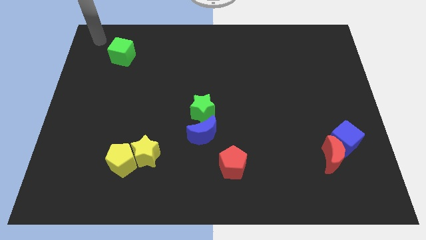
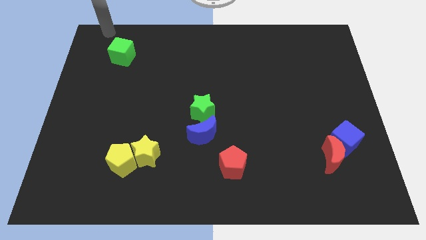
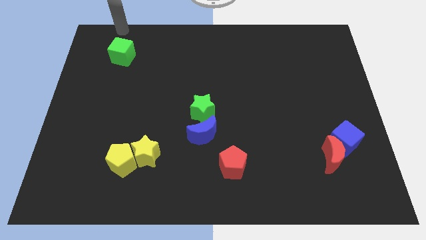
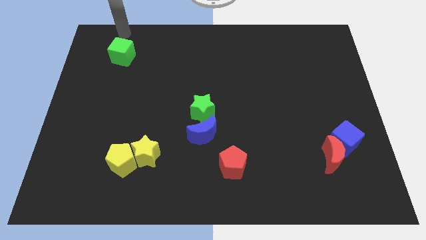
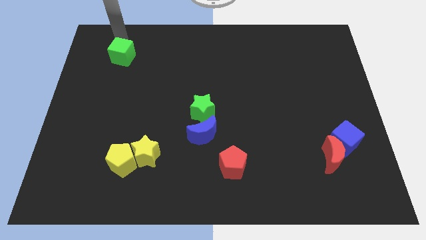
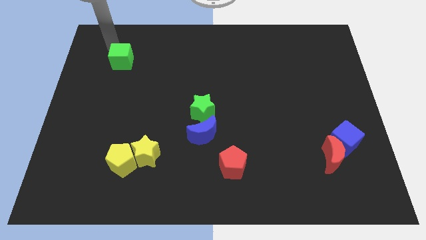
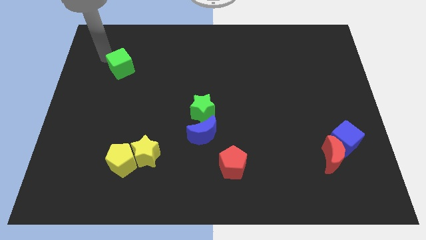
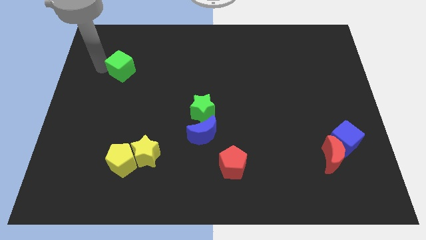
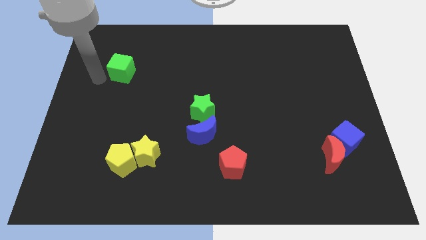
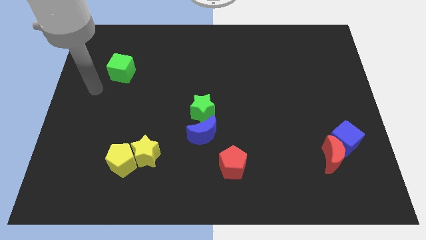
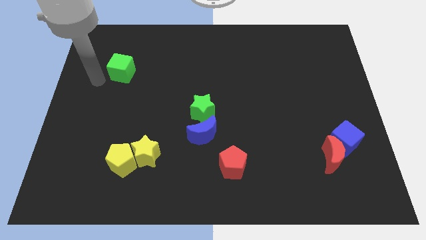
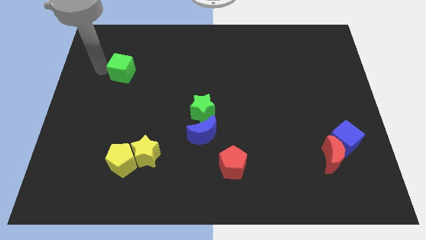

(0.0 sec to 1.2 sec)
move green cube slightly down

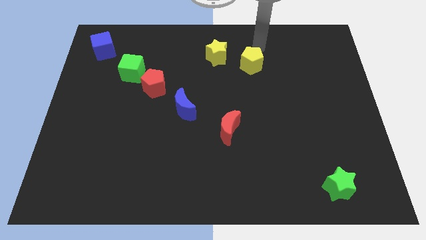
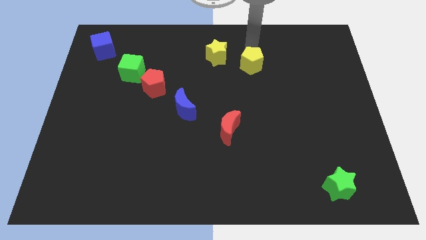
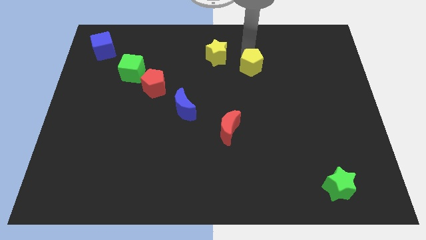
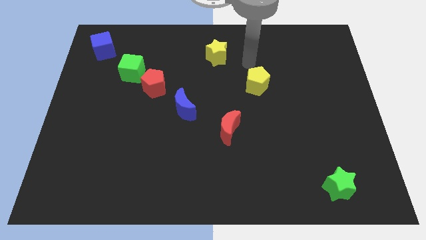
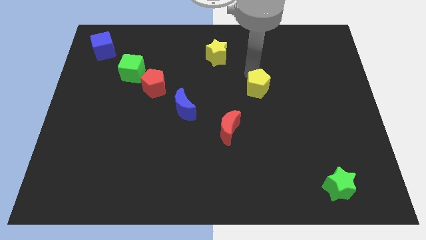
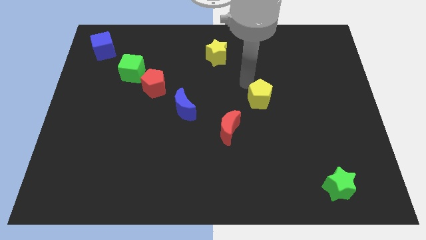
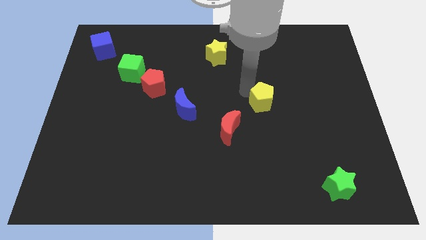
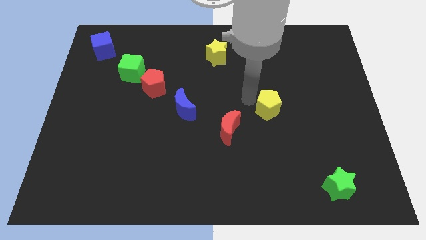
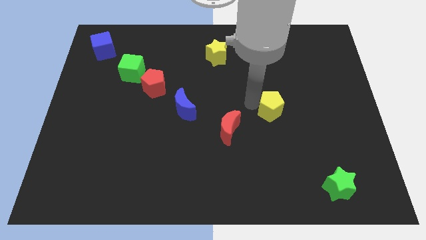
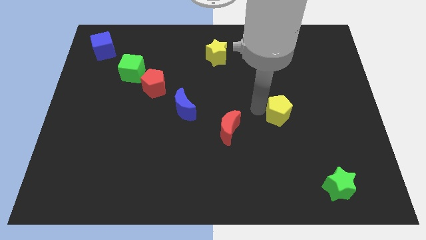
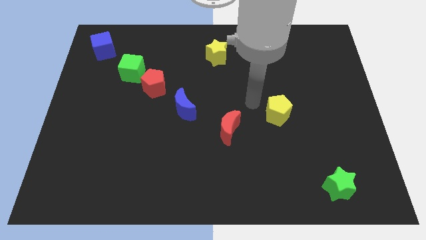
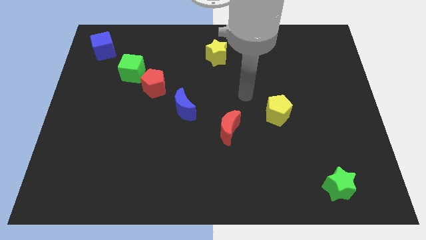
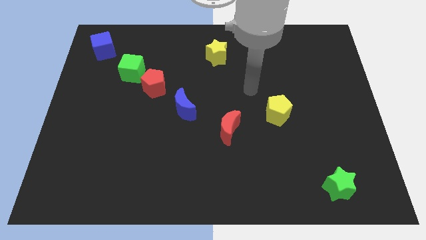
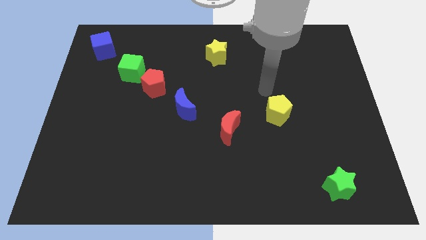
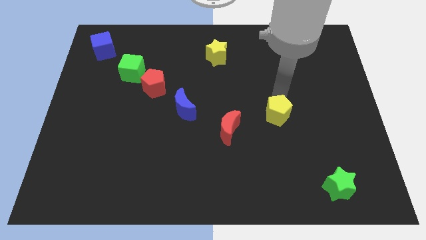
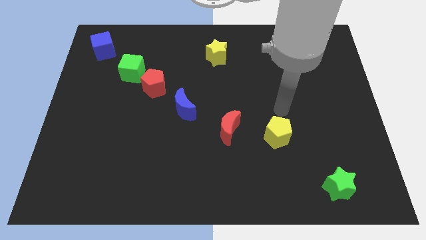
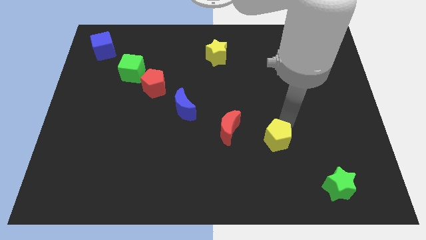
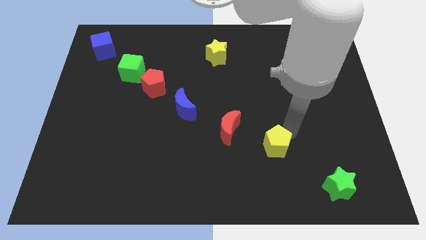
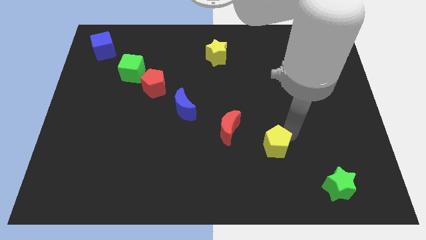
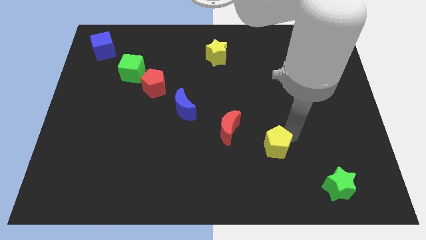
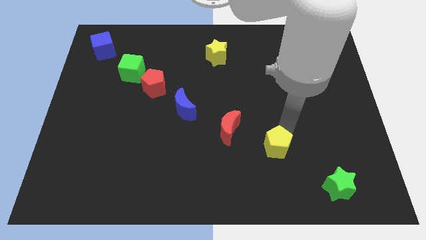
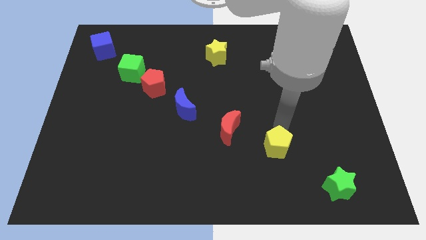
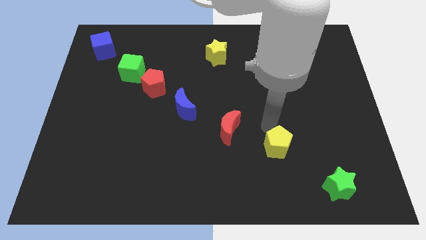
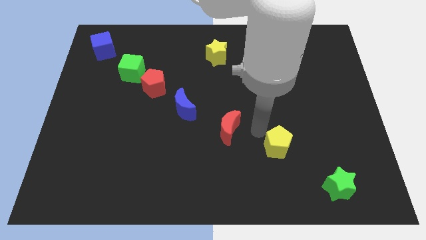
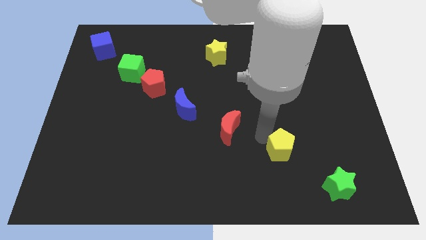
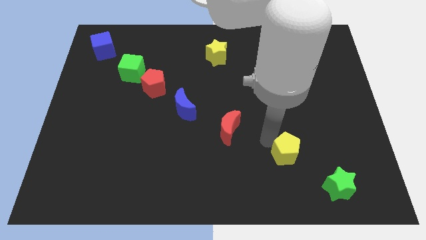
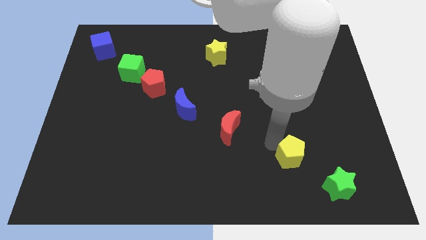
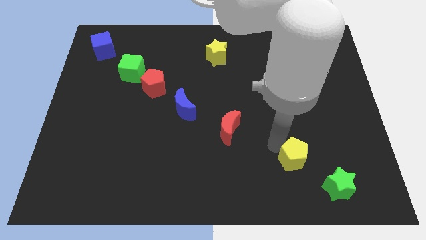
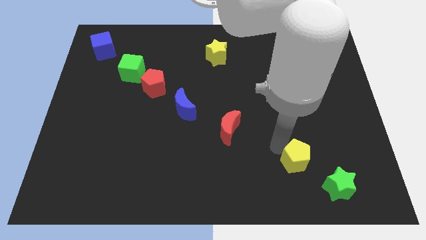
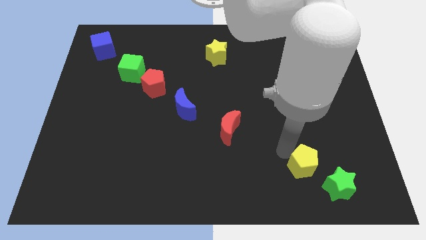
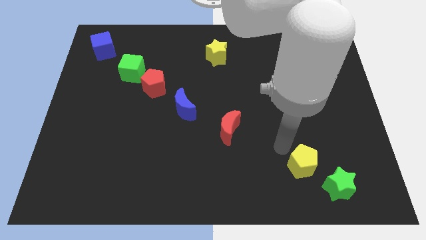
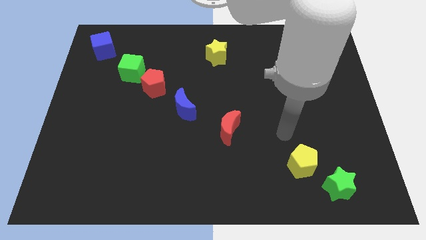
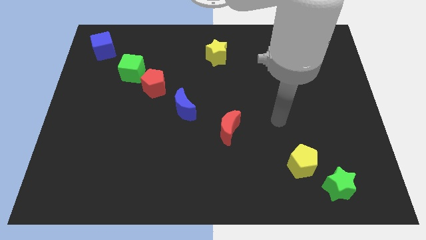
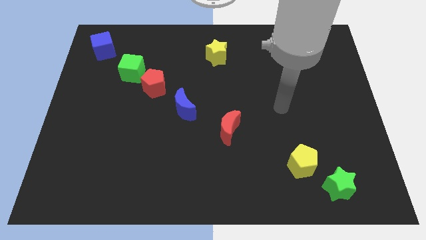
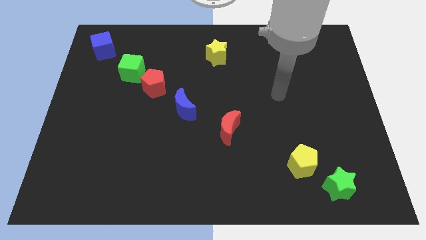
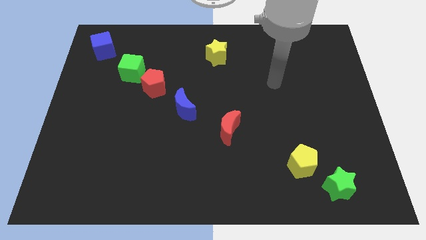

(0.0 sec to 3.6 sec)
move the yellow pentagon to the left of the green star

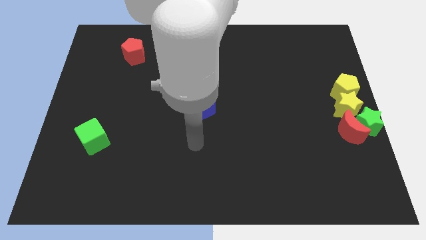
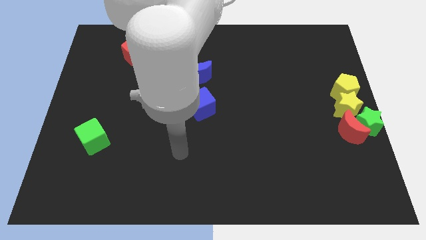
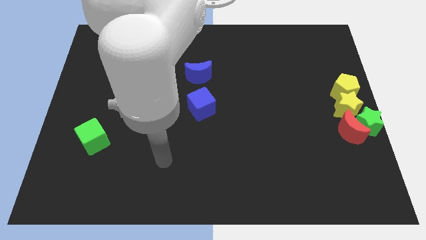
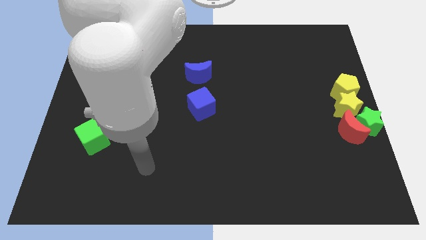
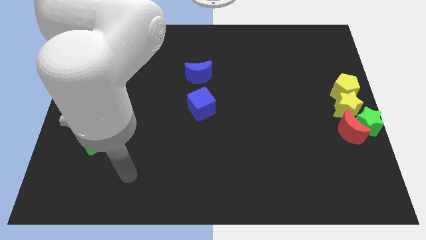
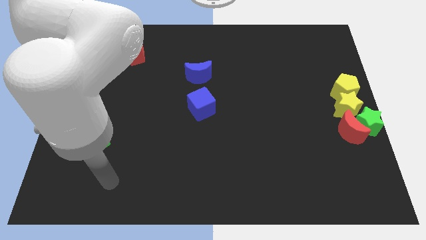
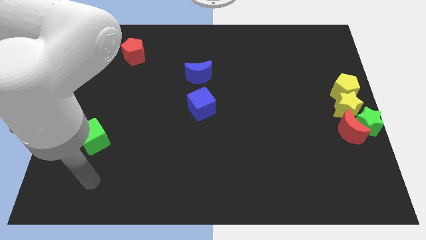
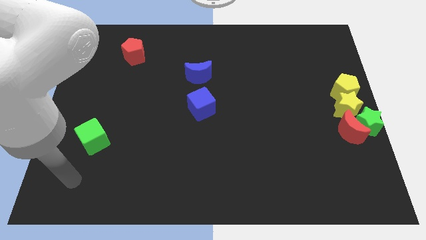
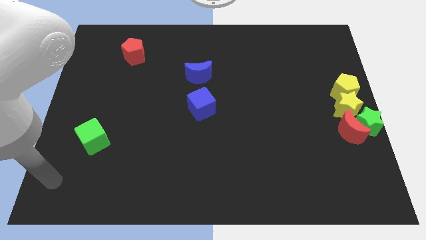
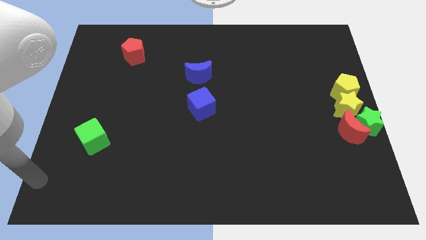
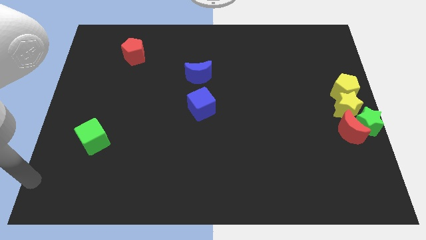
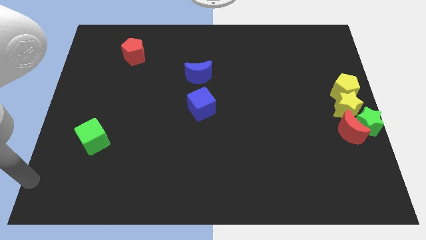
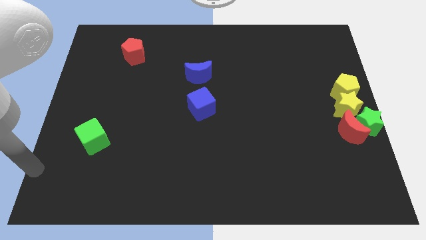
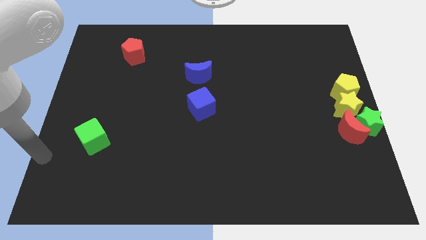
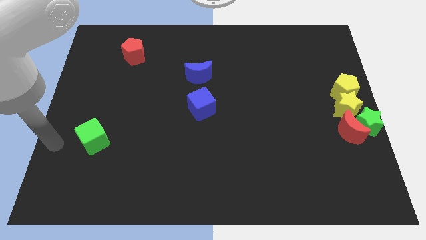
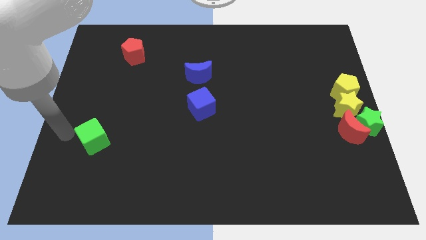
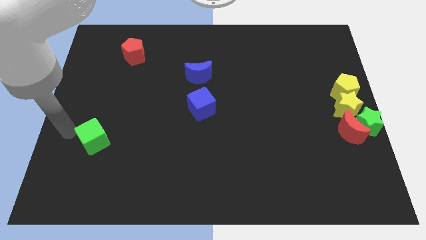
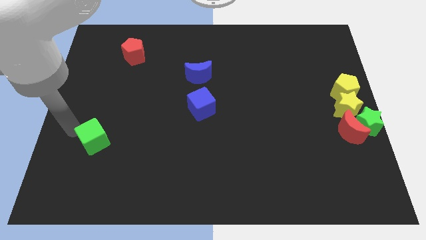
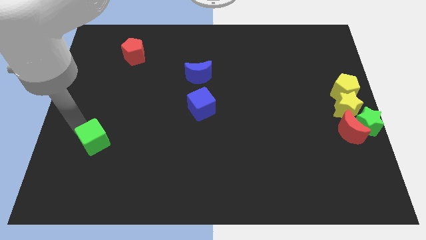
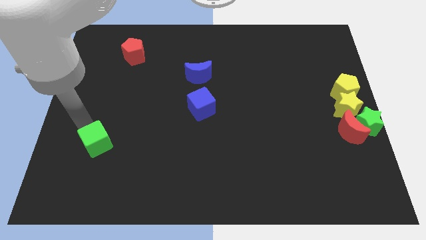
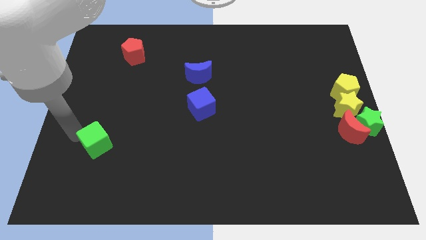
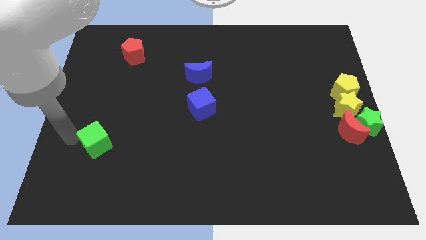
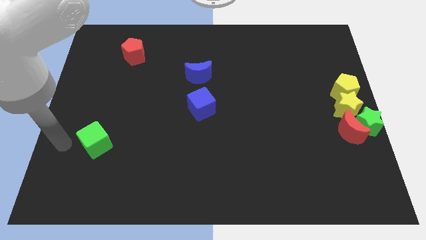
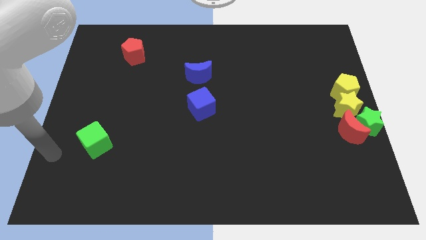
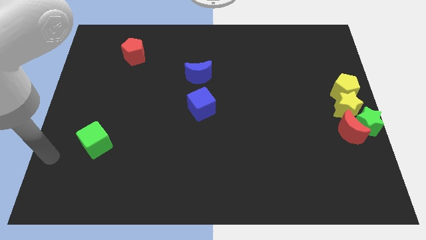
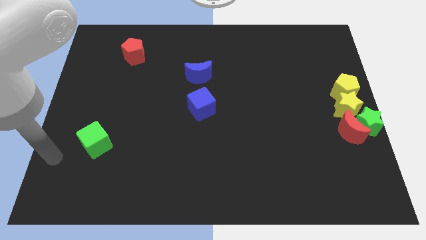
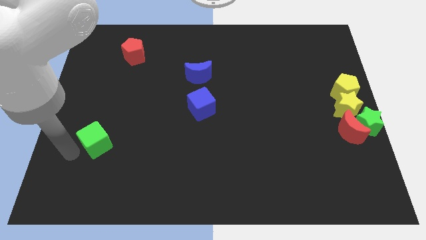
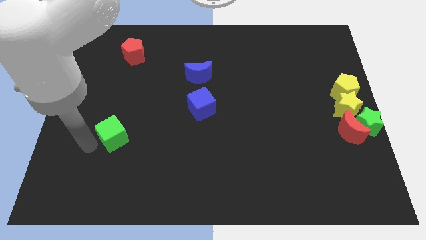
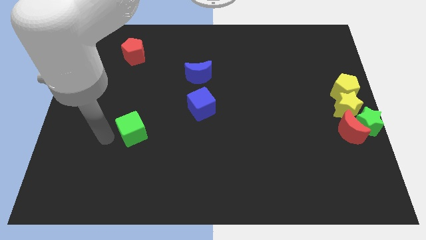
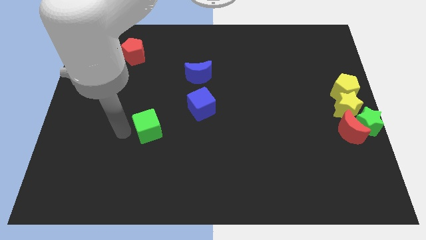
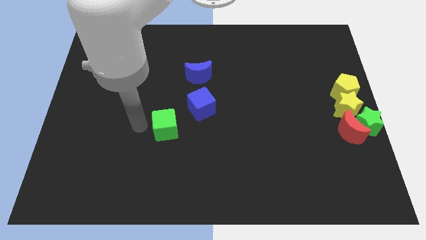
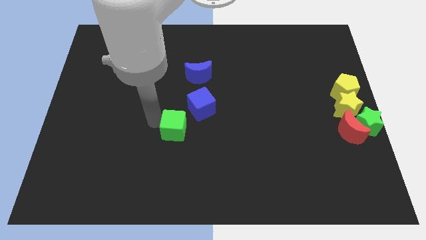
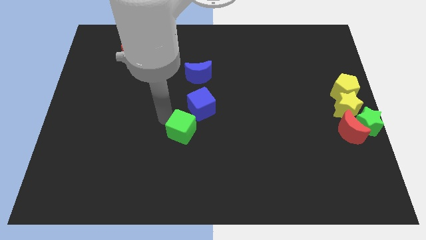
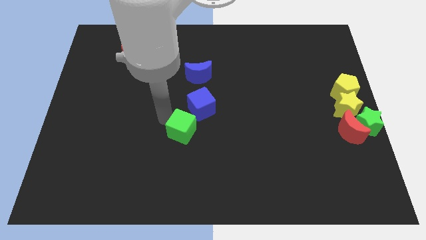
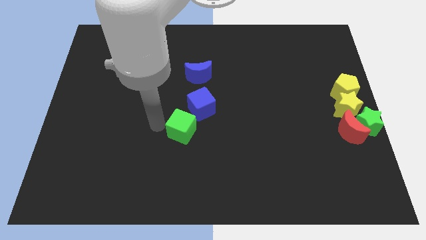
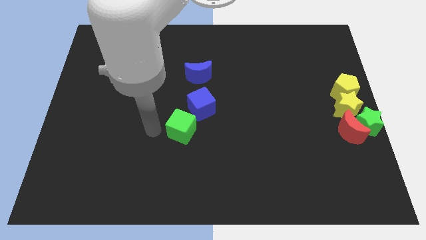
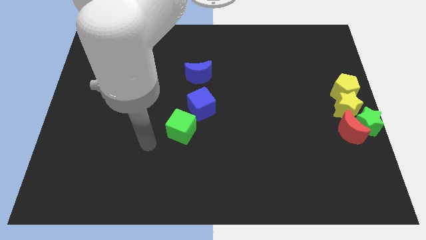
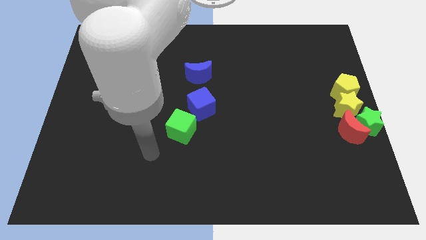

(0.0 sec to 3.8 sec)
move green cube left below the green cube

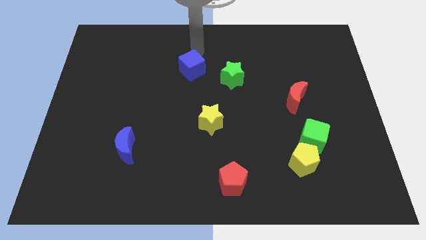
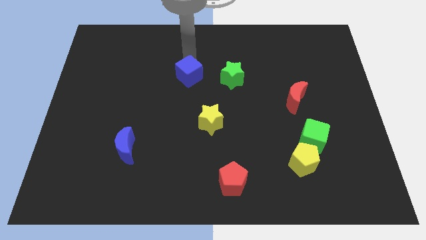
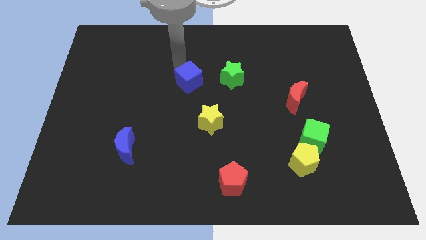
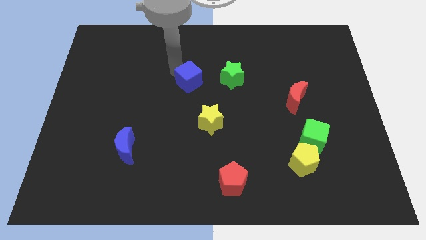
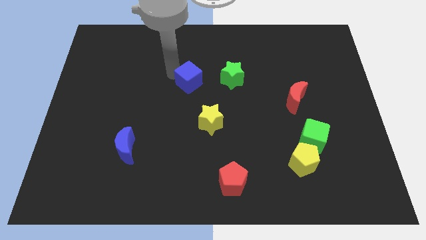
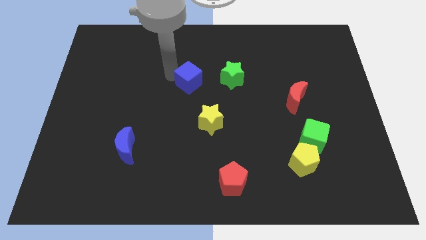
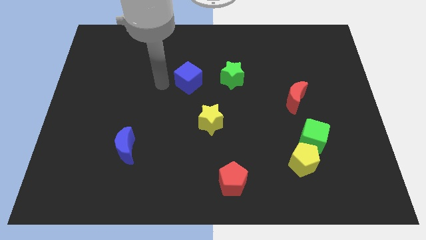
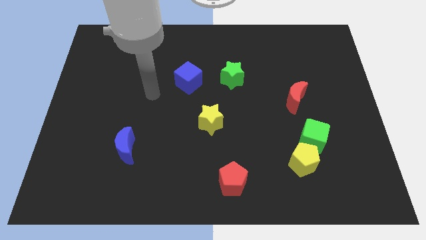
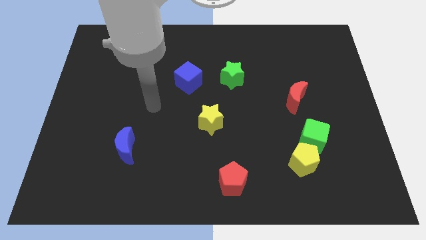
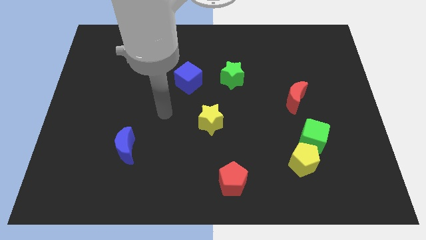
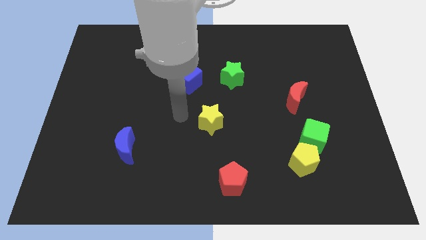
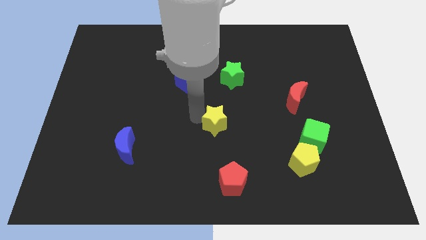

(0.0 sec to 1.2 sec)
place the arm left to the yellow star
